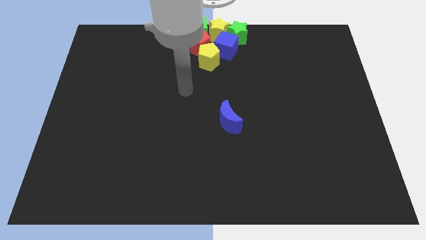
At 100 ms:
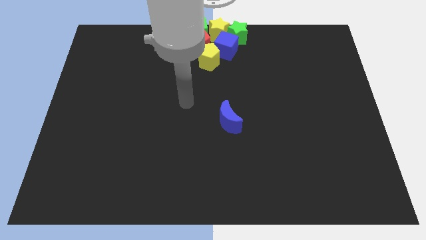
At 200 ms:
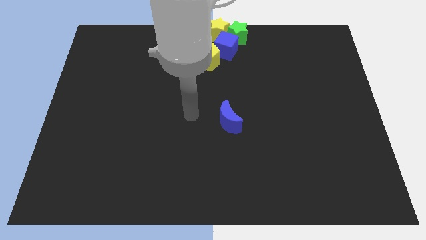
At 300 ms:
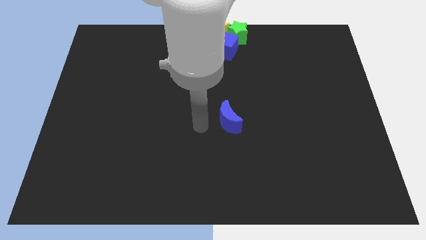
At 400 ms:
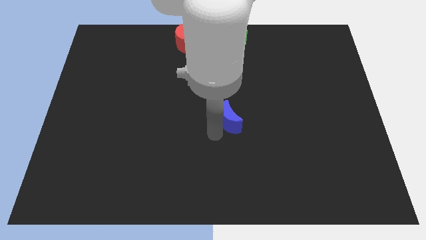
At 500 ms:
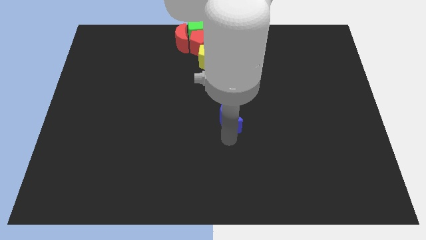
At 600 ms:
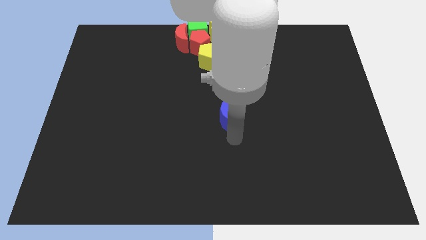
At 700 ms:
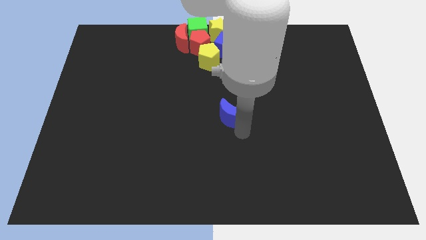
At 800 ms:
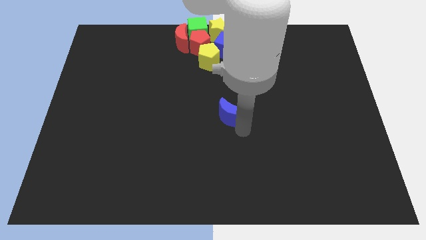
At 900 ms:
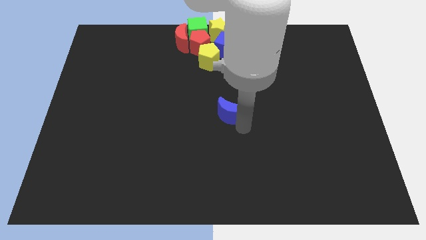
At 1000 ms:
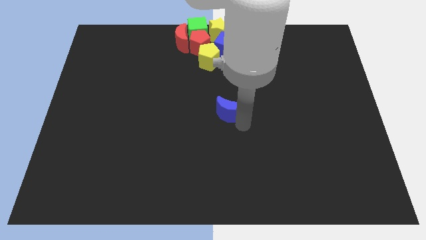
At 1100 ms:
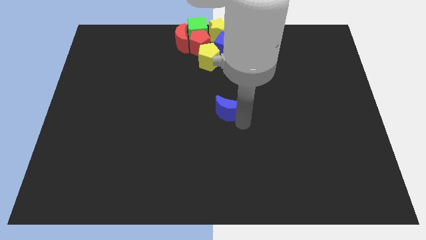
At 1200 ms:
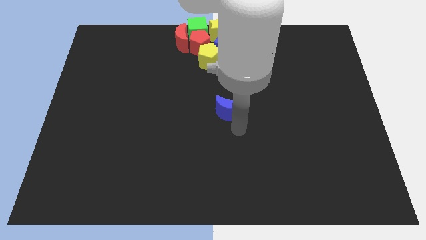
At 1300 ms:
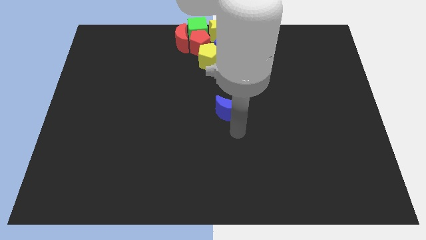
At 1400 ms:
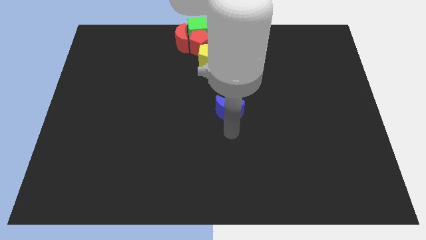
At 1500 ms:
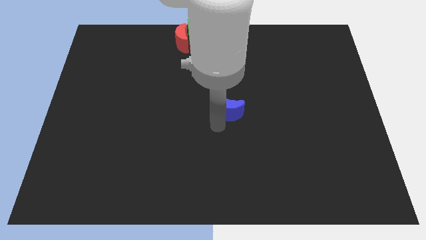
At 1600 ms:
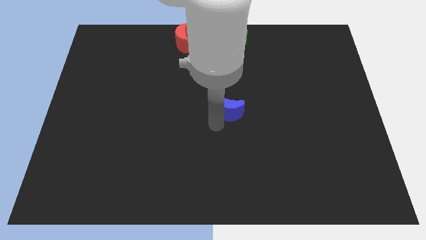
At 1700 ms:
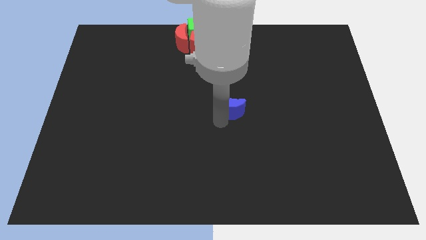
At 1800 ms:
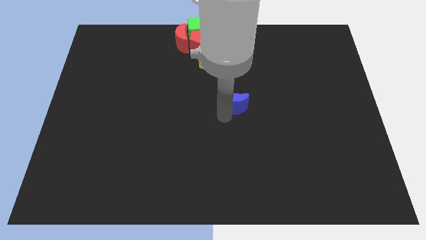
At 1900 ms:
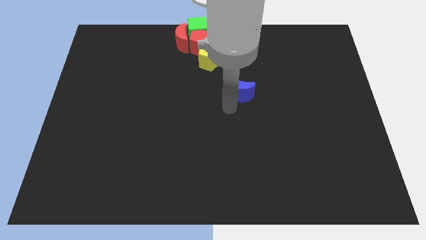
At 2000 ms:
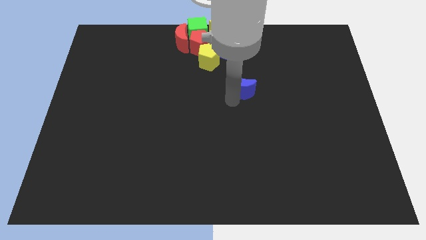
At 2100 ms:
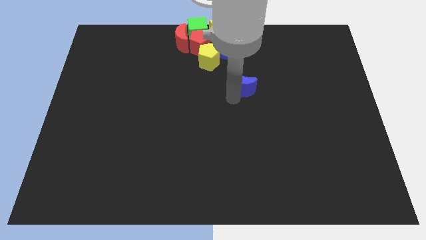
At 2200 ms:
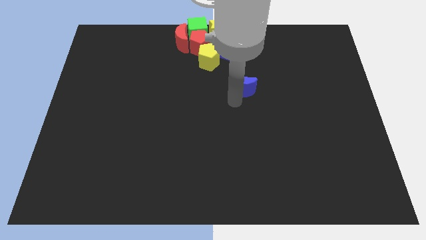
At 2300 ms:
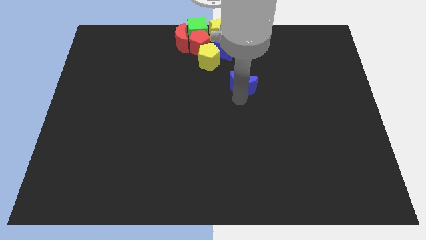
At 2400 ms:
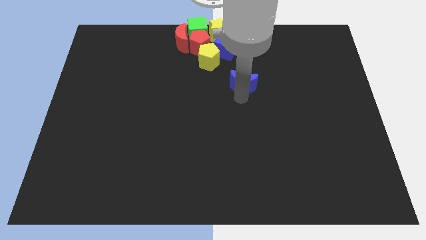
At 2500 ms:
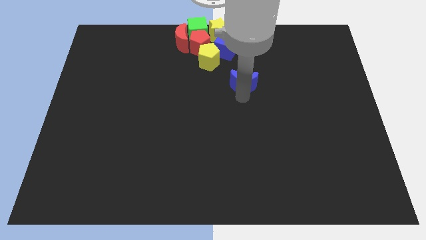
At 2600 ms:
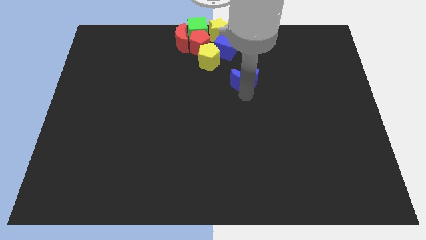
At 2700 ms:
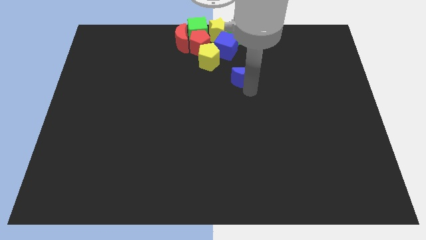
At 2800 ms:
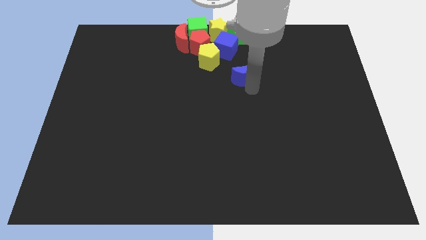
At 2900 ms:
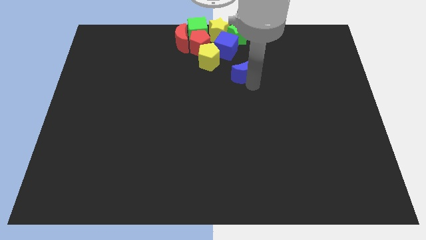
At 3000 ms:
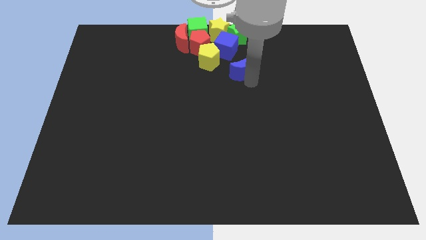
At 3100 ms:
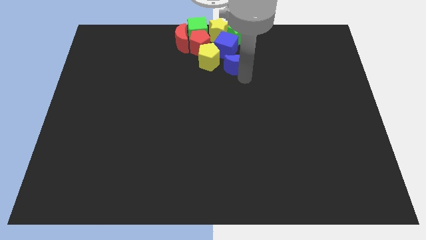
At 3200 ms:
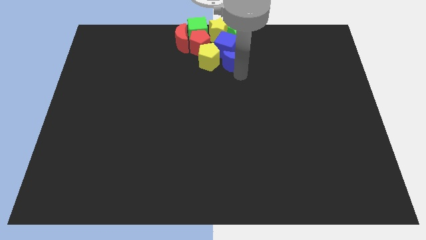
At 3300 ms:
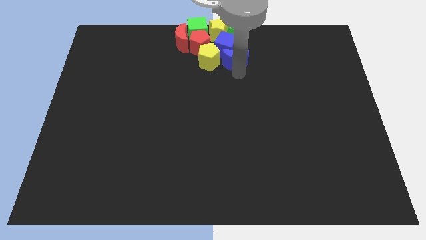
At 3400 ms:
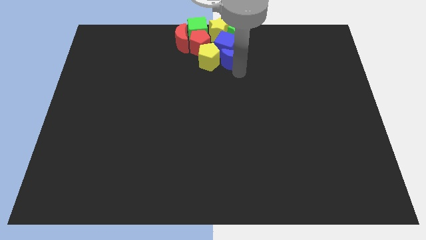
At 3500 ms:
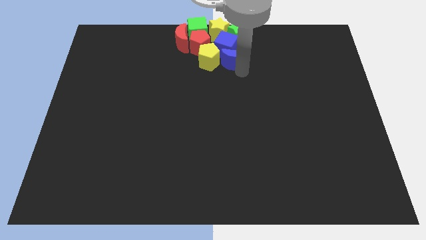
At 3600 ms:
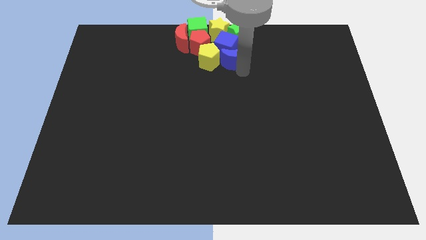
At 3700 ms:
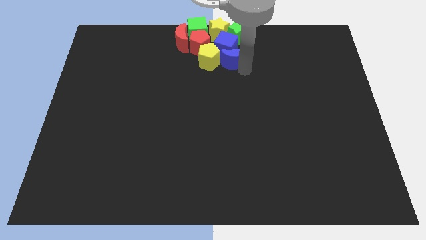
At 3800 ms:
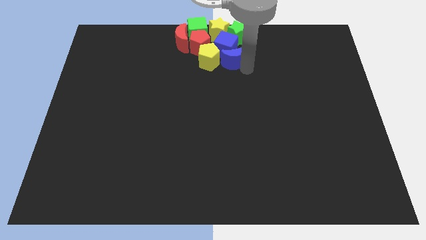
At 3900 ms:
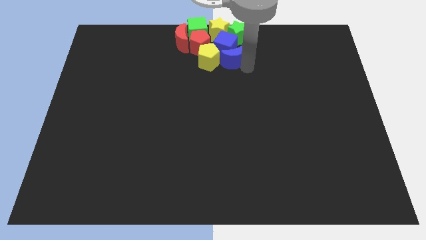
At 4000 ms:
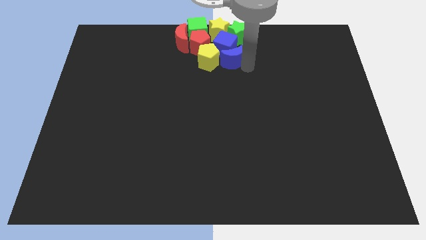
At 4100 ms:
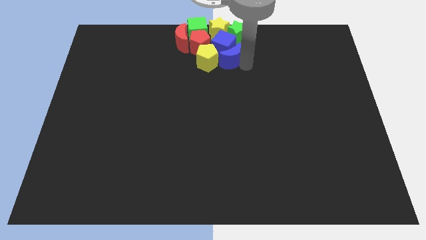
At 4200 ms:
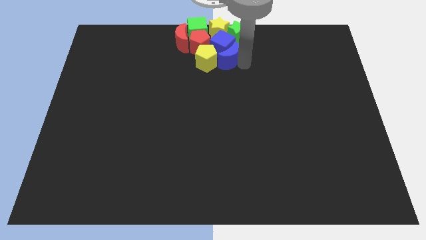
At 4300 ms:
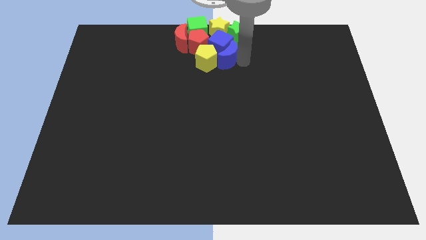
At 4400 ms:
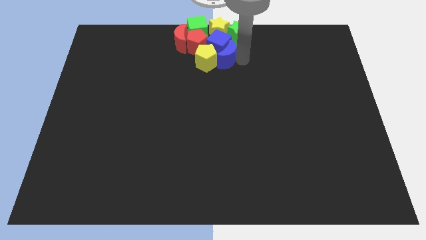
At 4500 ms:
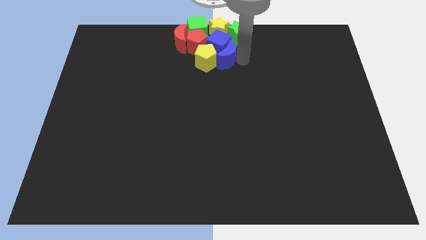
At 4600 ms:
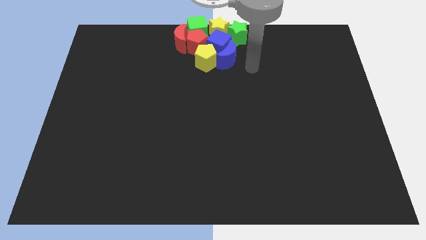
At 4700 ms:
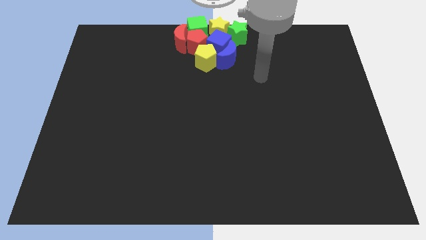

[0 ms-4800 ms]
move the blue crescent to the group of blocks

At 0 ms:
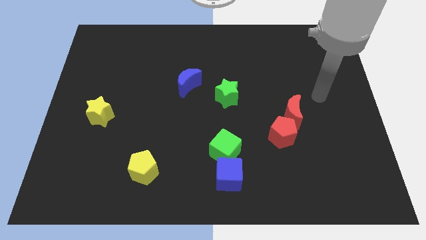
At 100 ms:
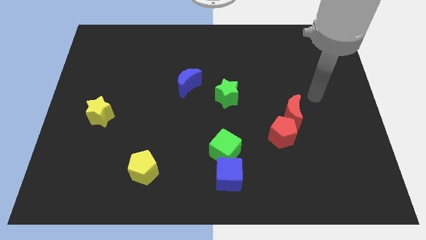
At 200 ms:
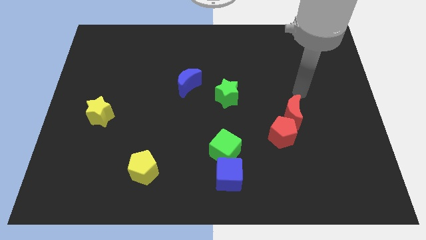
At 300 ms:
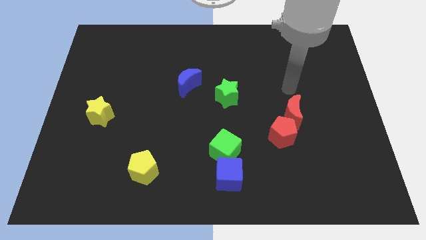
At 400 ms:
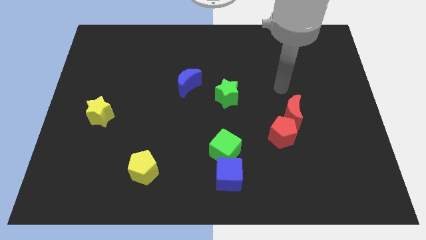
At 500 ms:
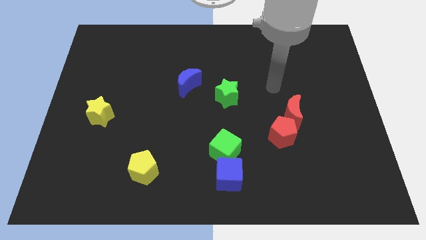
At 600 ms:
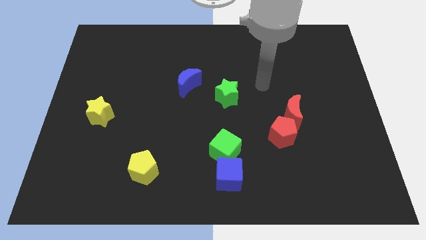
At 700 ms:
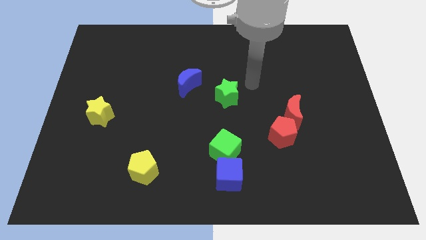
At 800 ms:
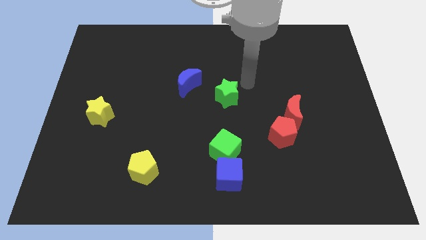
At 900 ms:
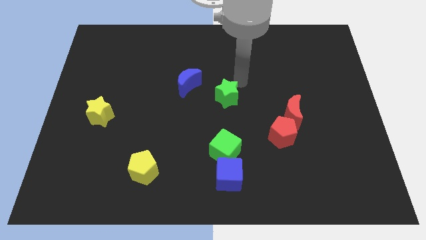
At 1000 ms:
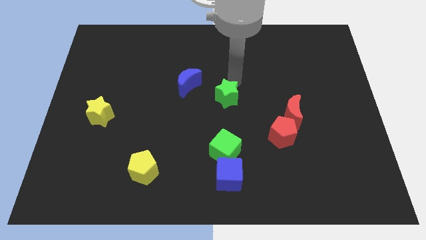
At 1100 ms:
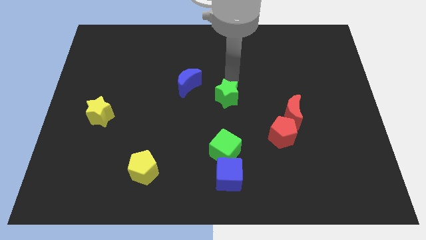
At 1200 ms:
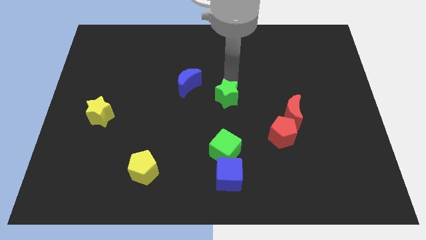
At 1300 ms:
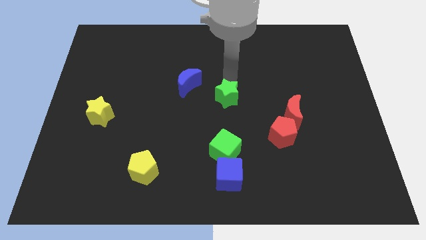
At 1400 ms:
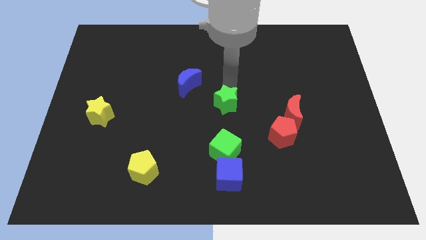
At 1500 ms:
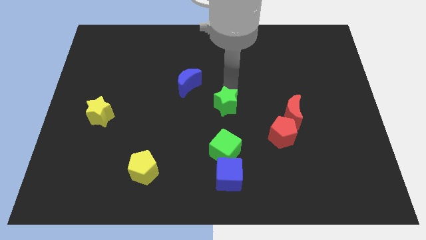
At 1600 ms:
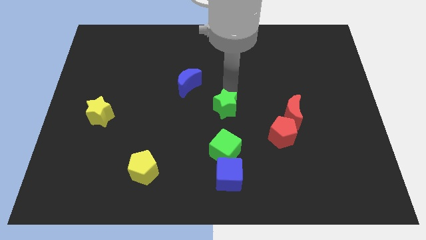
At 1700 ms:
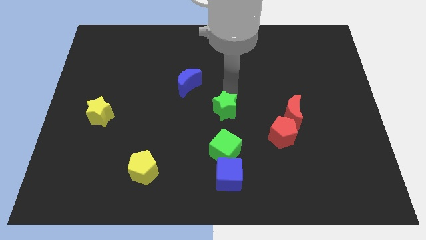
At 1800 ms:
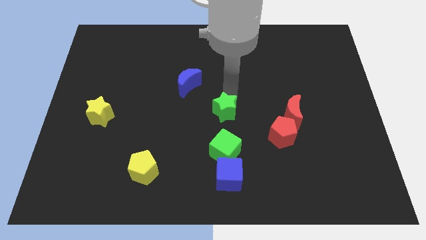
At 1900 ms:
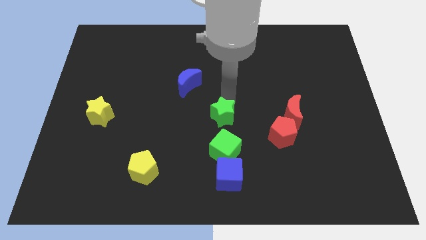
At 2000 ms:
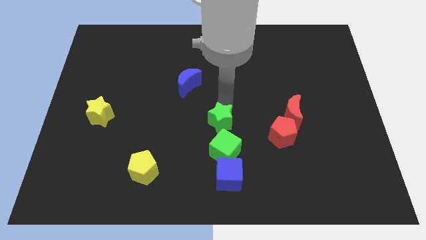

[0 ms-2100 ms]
move the green star to the top of the green cube

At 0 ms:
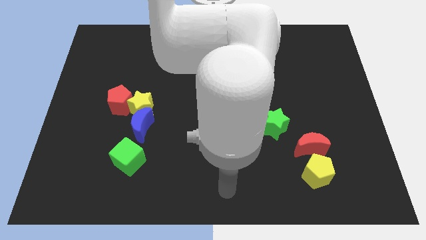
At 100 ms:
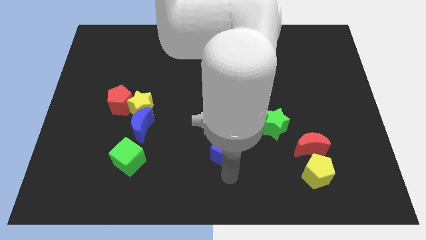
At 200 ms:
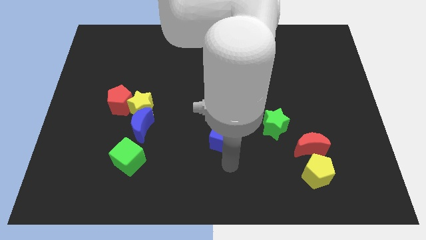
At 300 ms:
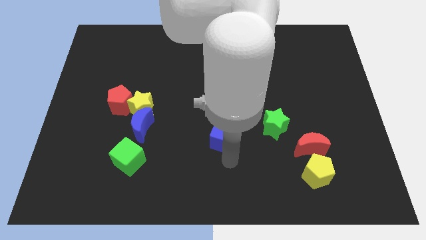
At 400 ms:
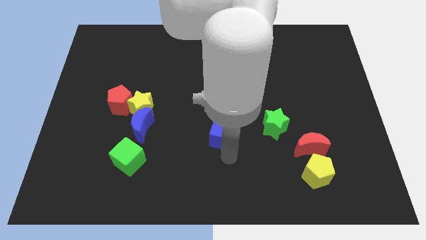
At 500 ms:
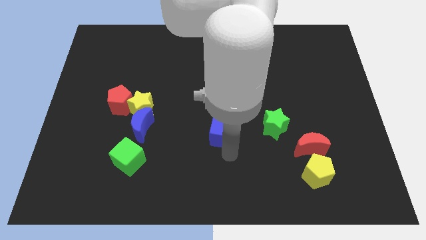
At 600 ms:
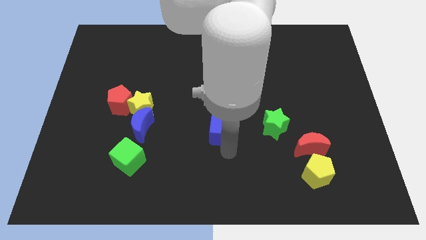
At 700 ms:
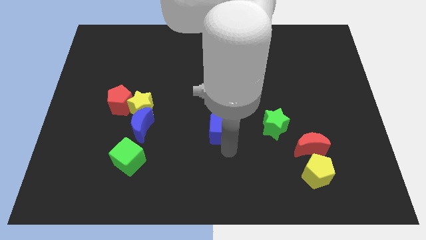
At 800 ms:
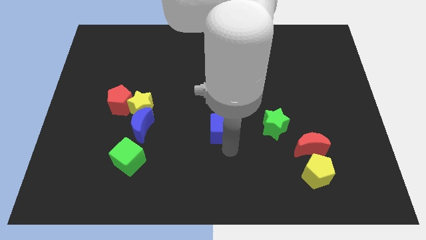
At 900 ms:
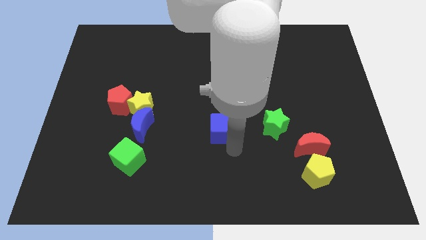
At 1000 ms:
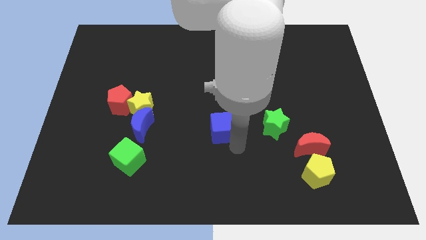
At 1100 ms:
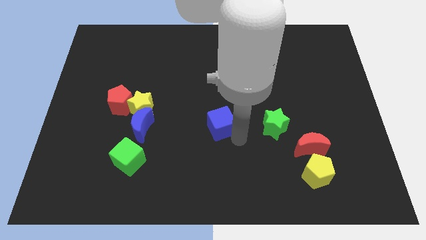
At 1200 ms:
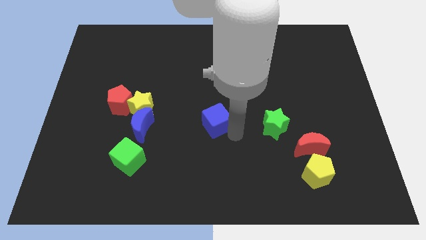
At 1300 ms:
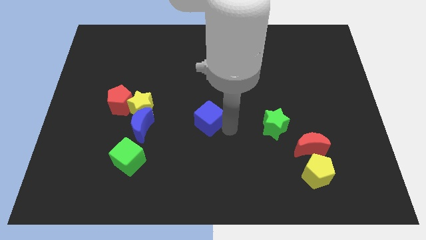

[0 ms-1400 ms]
push the blue cube to the left of green star

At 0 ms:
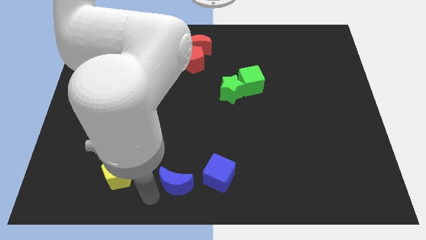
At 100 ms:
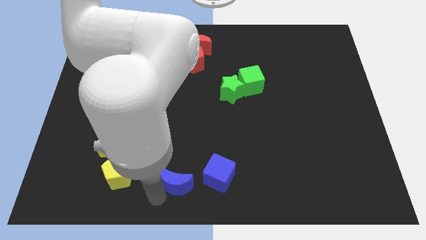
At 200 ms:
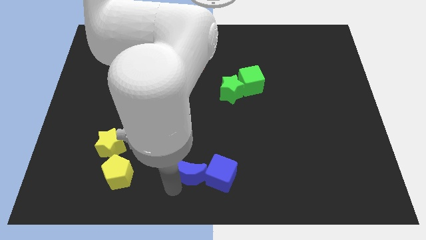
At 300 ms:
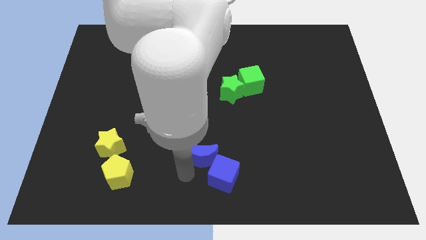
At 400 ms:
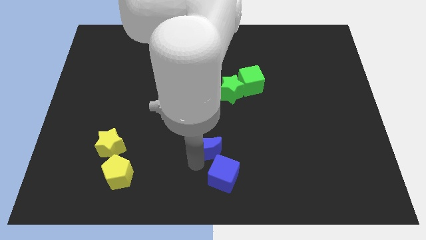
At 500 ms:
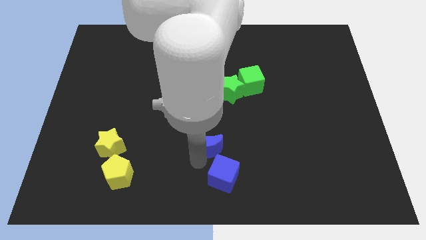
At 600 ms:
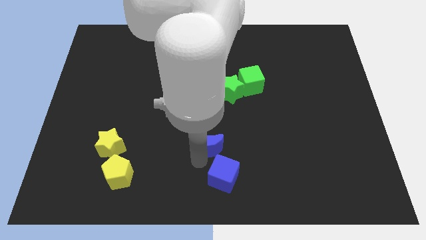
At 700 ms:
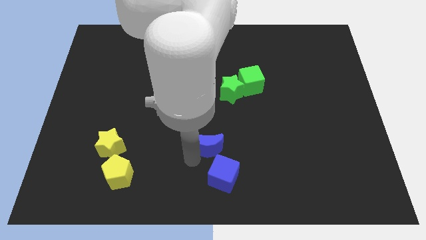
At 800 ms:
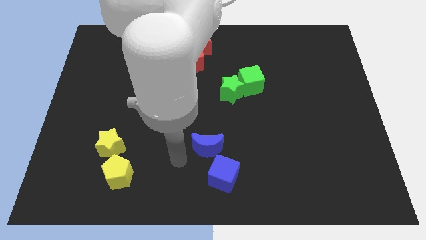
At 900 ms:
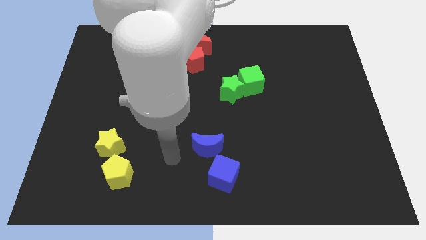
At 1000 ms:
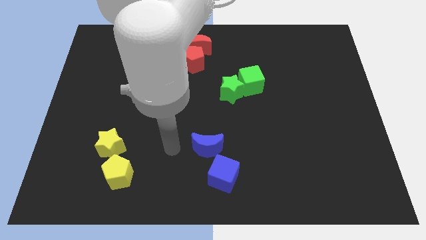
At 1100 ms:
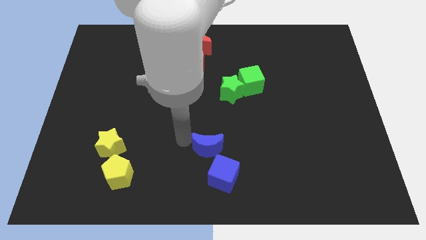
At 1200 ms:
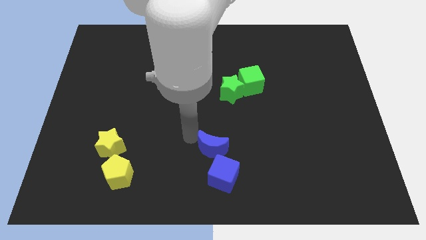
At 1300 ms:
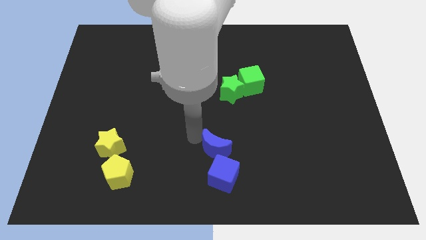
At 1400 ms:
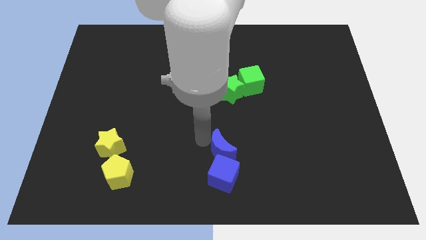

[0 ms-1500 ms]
slide the blue crescent on the top of the blue cube
